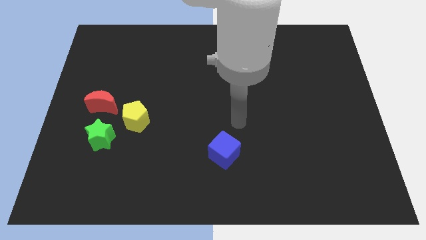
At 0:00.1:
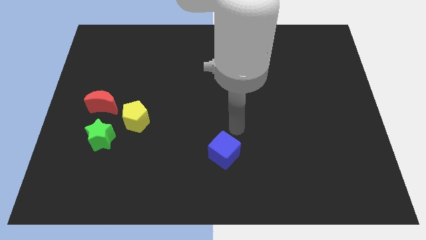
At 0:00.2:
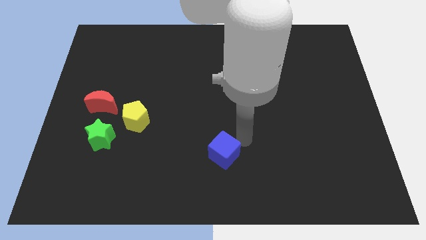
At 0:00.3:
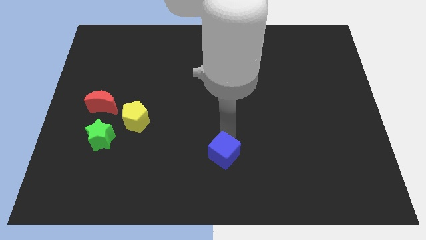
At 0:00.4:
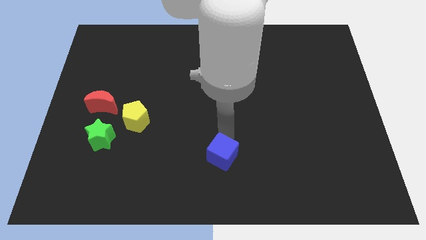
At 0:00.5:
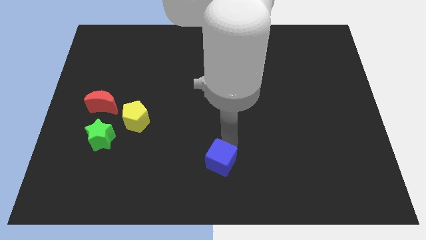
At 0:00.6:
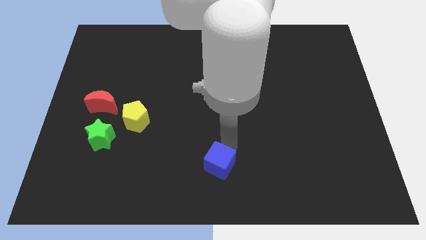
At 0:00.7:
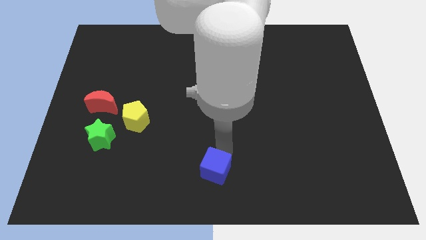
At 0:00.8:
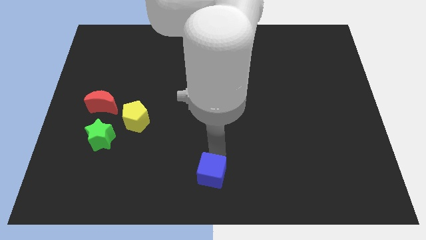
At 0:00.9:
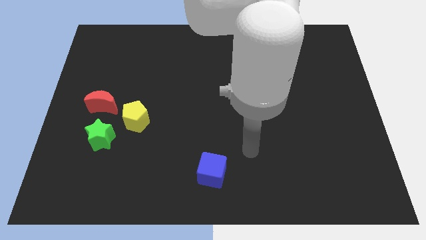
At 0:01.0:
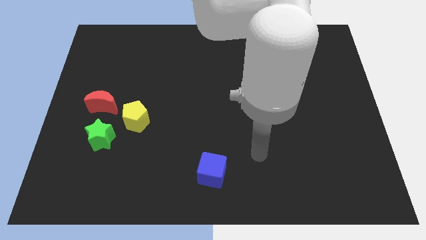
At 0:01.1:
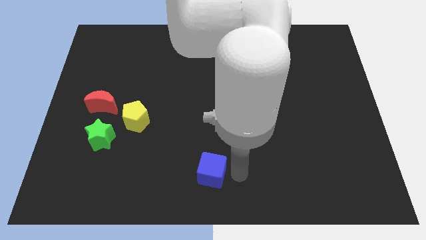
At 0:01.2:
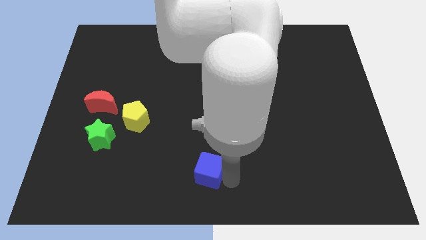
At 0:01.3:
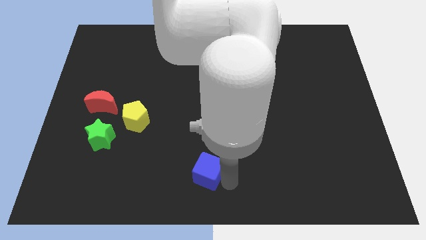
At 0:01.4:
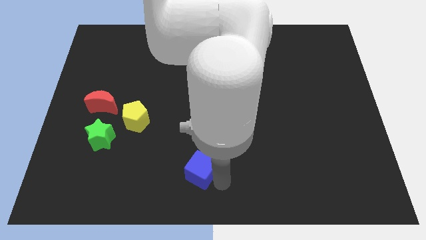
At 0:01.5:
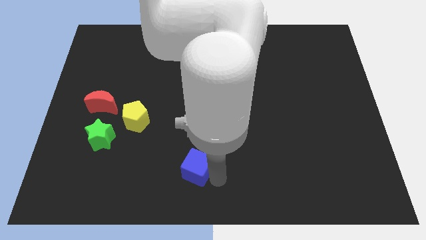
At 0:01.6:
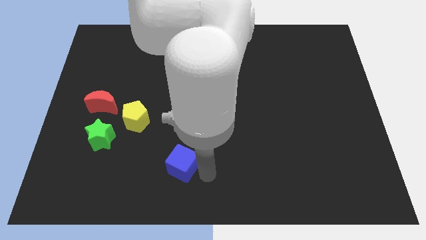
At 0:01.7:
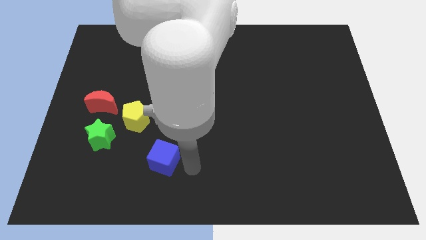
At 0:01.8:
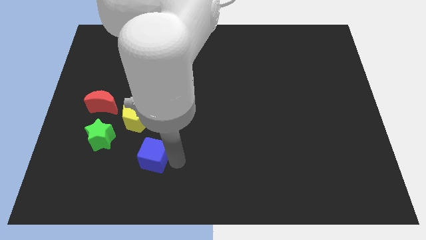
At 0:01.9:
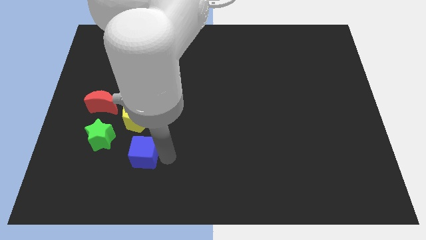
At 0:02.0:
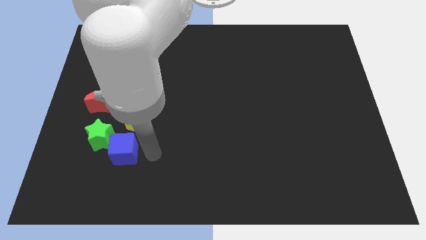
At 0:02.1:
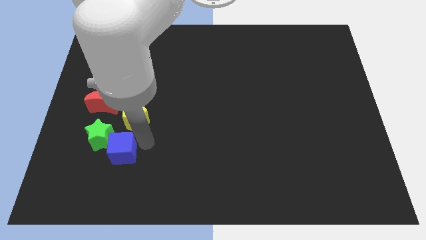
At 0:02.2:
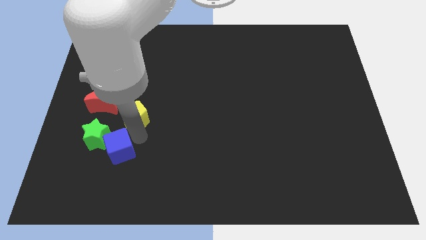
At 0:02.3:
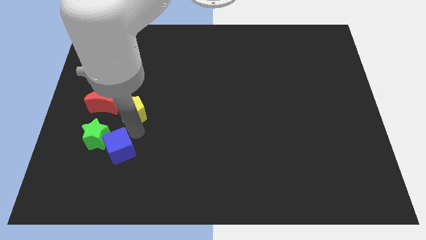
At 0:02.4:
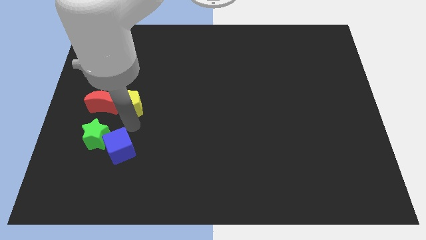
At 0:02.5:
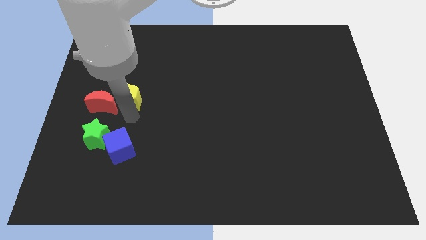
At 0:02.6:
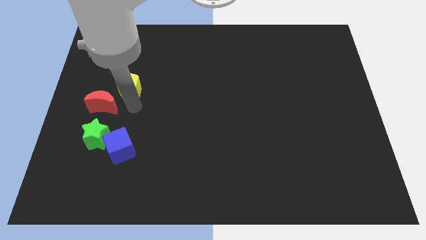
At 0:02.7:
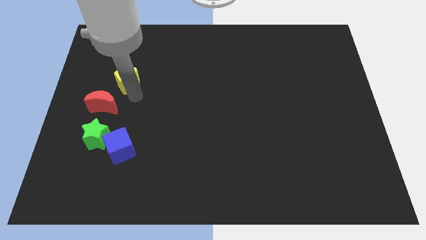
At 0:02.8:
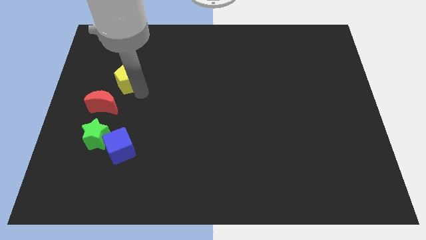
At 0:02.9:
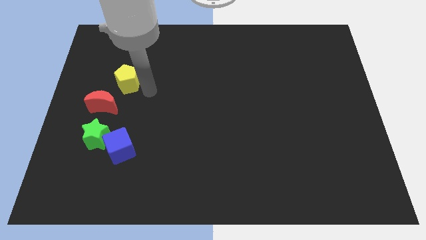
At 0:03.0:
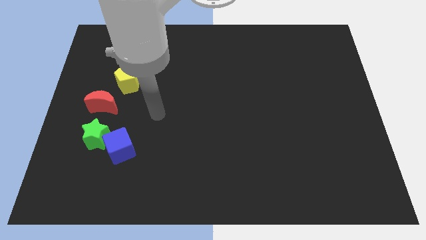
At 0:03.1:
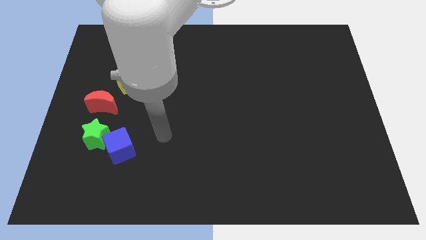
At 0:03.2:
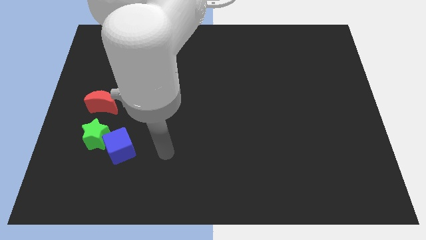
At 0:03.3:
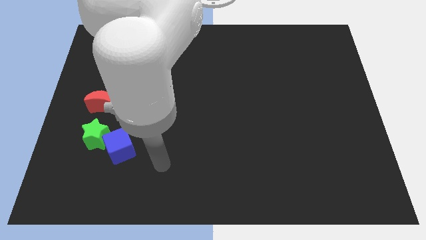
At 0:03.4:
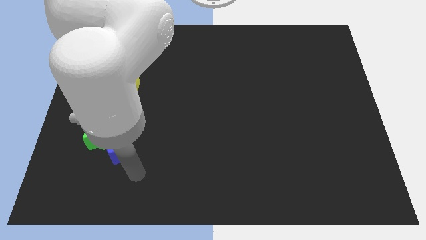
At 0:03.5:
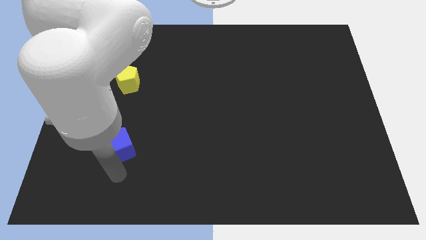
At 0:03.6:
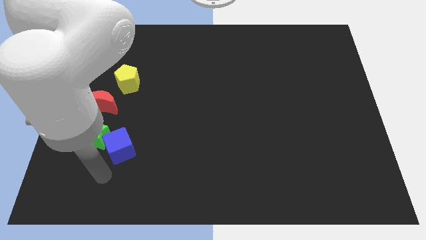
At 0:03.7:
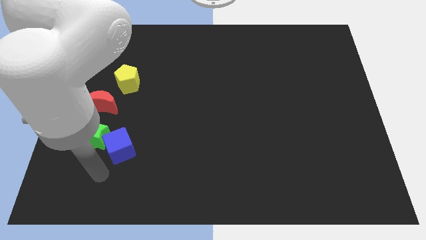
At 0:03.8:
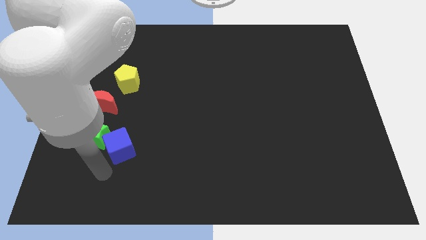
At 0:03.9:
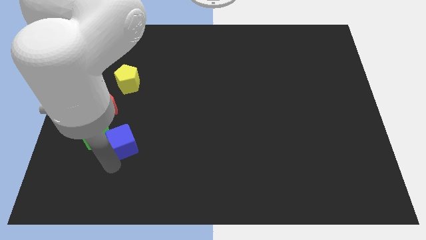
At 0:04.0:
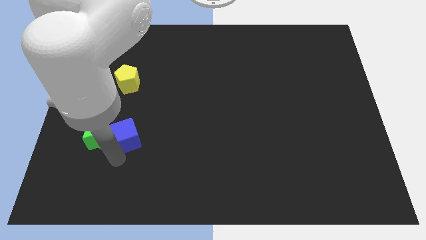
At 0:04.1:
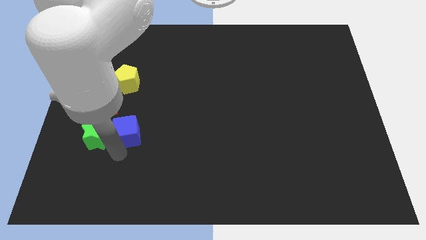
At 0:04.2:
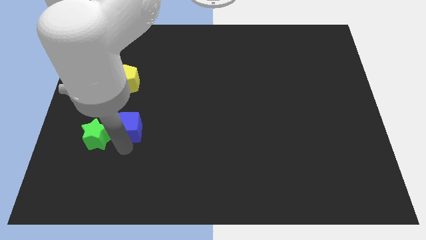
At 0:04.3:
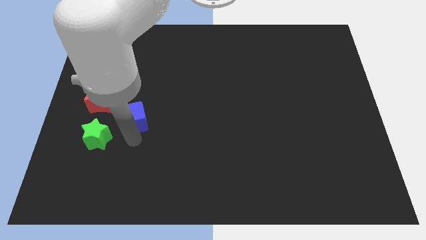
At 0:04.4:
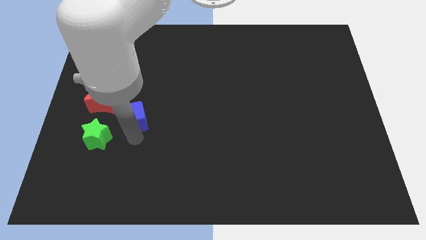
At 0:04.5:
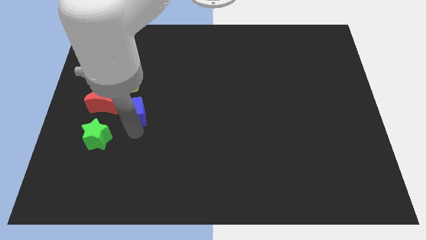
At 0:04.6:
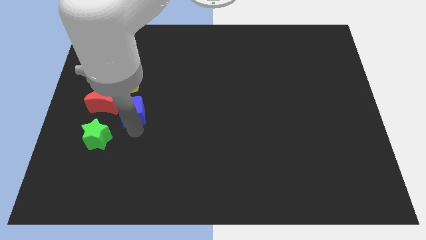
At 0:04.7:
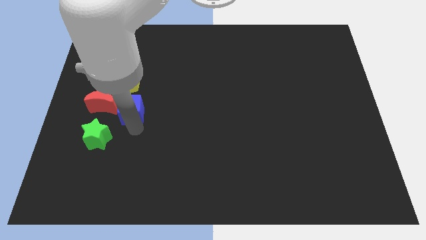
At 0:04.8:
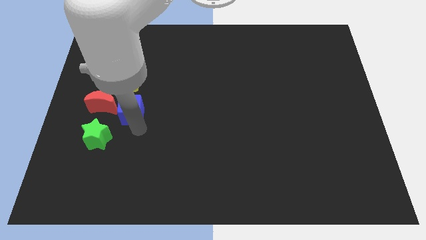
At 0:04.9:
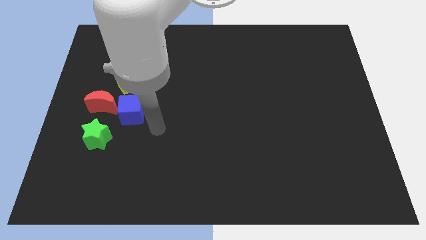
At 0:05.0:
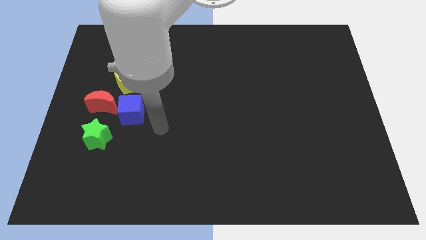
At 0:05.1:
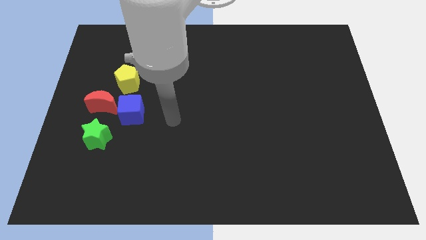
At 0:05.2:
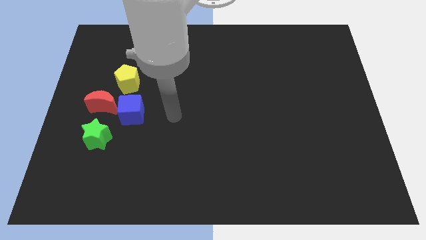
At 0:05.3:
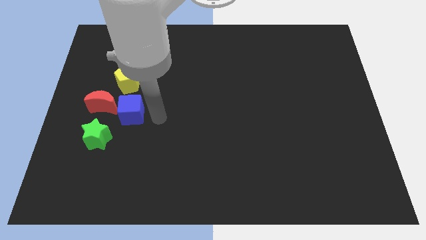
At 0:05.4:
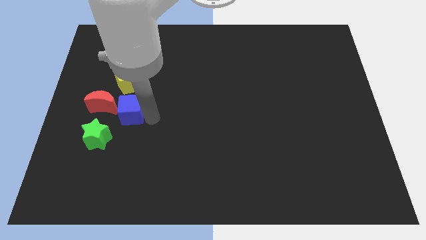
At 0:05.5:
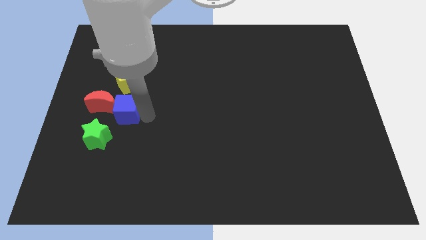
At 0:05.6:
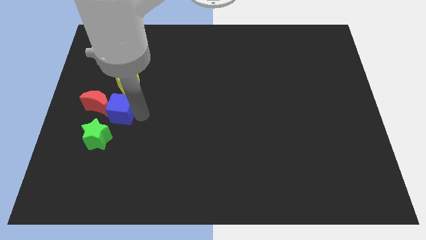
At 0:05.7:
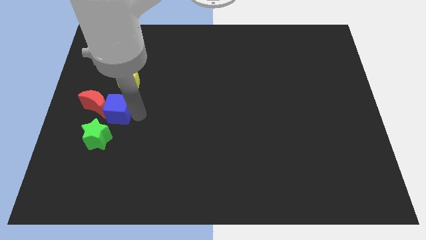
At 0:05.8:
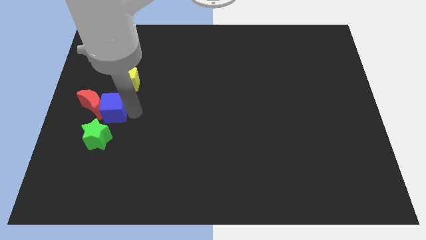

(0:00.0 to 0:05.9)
put the cube next to the red moon

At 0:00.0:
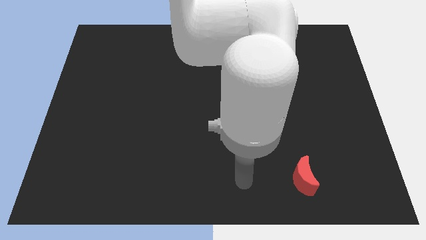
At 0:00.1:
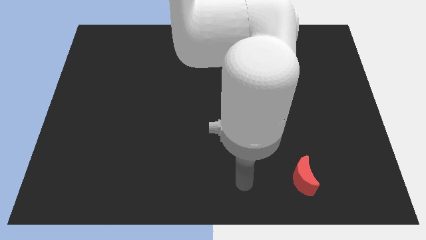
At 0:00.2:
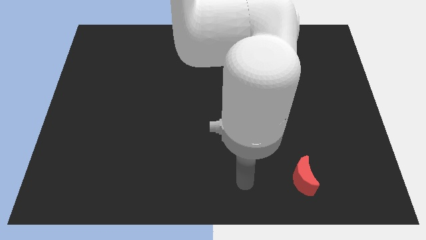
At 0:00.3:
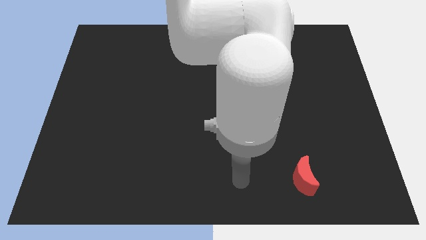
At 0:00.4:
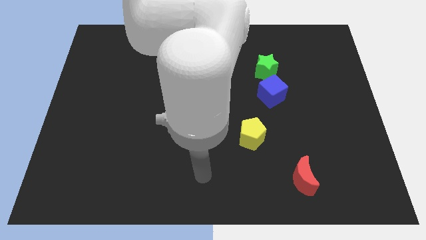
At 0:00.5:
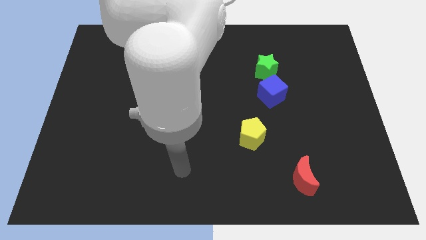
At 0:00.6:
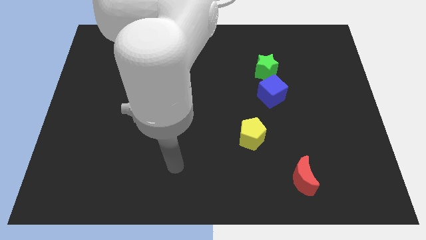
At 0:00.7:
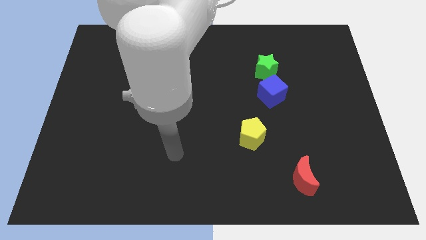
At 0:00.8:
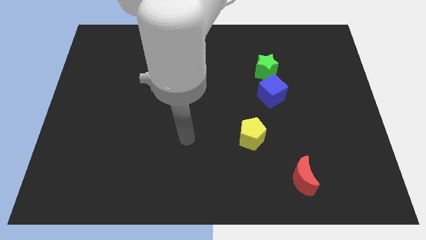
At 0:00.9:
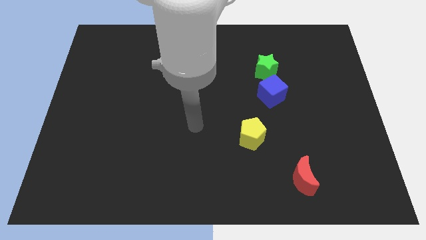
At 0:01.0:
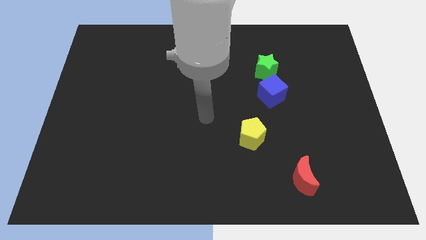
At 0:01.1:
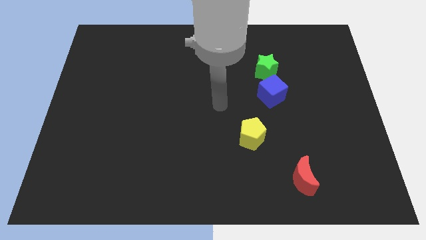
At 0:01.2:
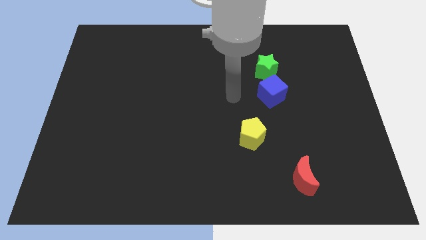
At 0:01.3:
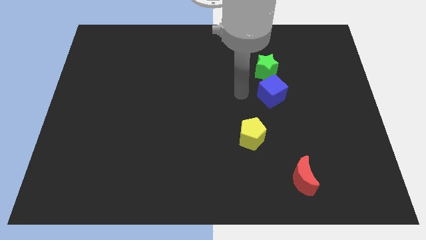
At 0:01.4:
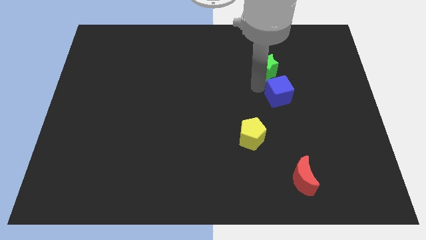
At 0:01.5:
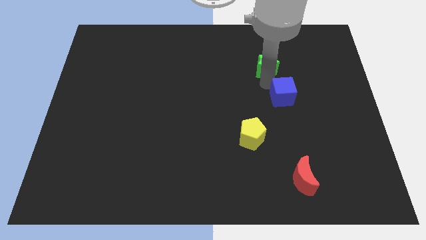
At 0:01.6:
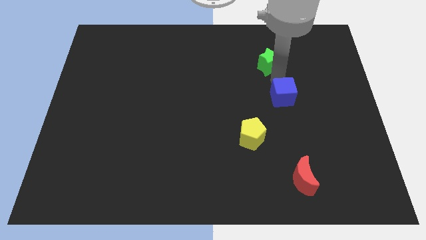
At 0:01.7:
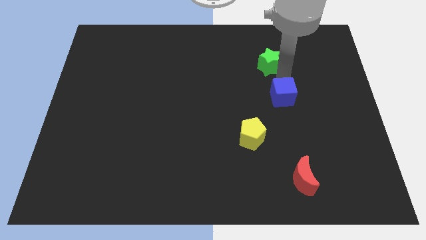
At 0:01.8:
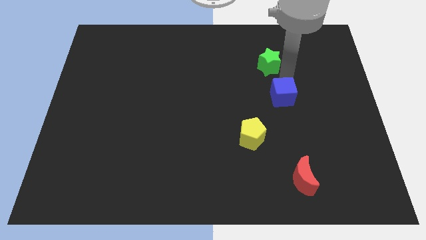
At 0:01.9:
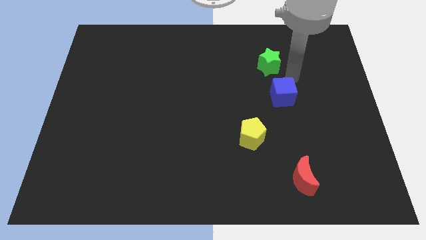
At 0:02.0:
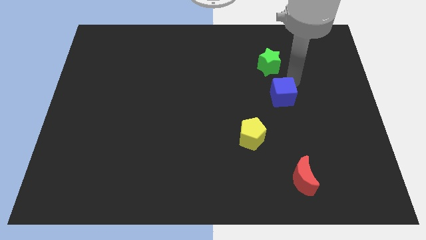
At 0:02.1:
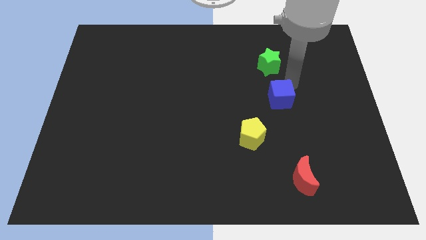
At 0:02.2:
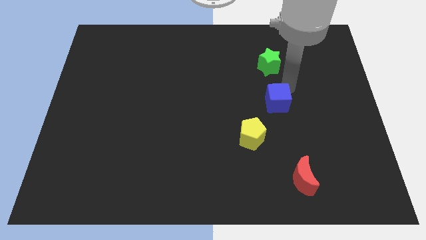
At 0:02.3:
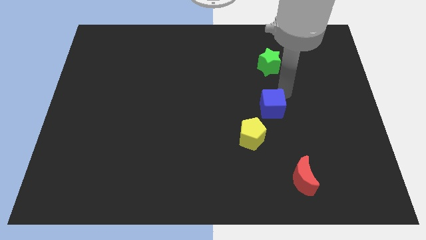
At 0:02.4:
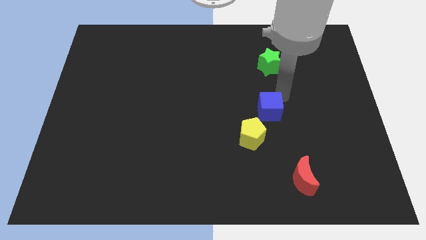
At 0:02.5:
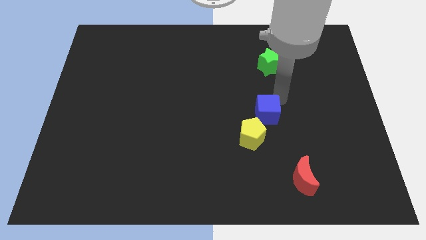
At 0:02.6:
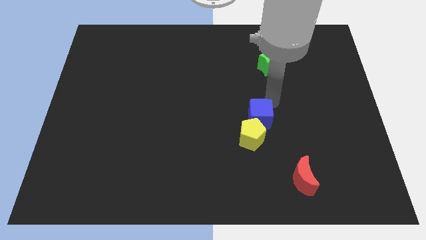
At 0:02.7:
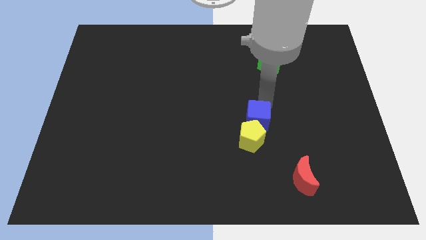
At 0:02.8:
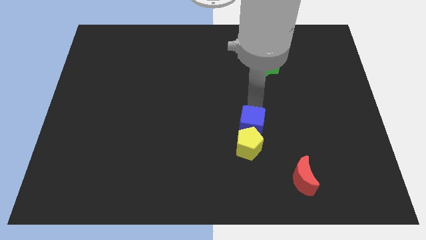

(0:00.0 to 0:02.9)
put the cube close to the yellow pentagon
